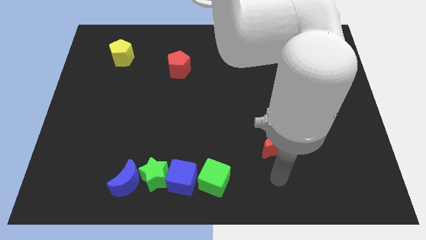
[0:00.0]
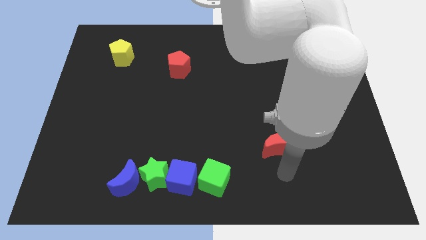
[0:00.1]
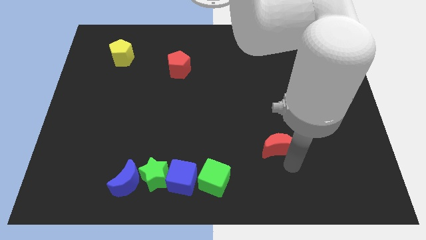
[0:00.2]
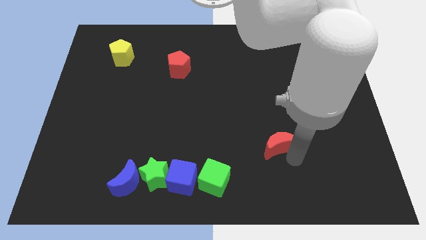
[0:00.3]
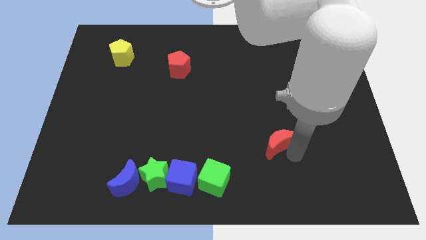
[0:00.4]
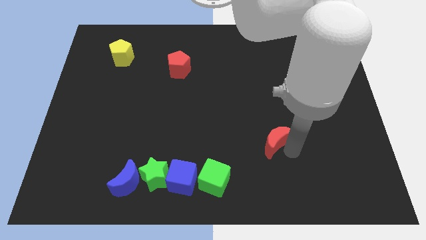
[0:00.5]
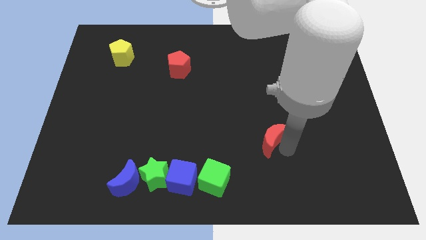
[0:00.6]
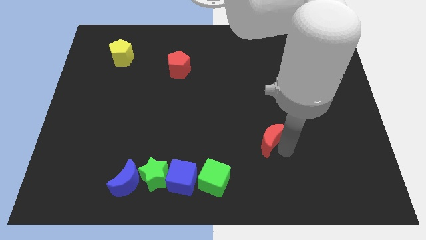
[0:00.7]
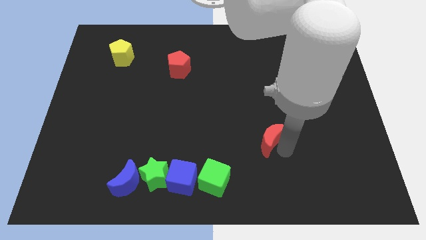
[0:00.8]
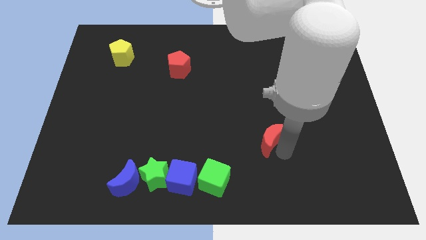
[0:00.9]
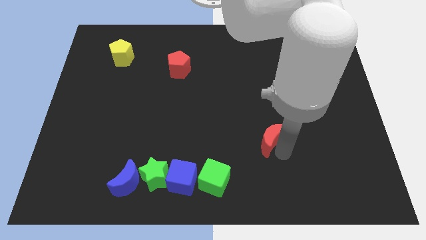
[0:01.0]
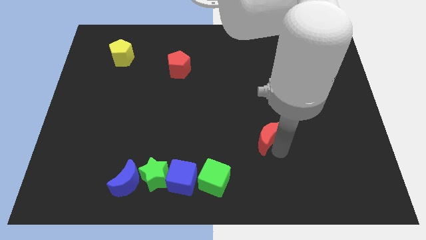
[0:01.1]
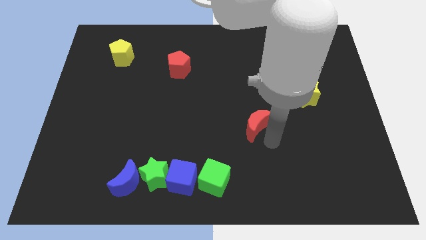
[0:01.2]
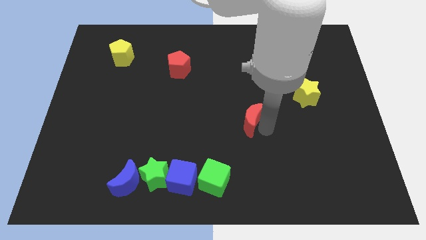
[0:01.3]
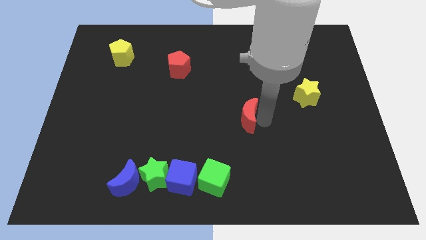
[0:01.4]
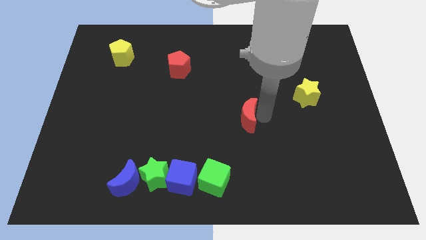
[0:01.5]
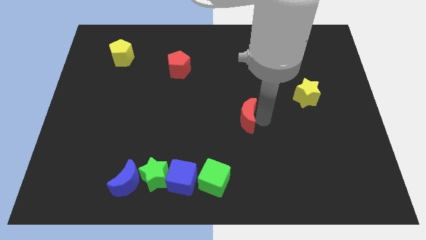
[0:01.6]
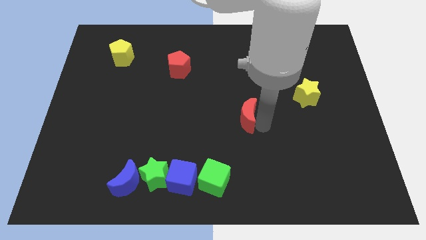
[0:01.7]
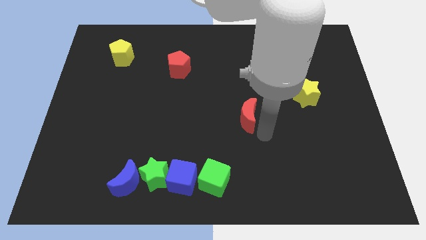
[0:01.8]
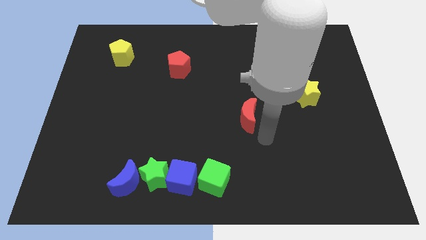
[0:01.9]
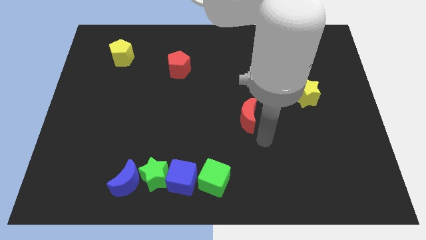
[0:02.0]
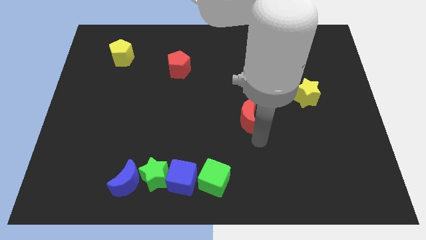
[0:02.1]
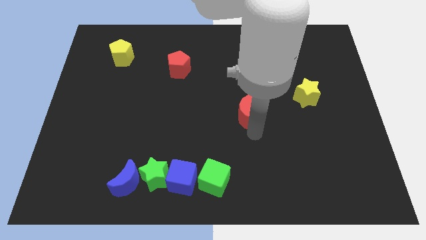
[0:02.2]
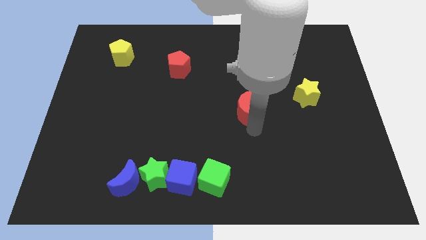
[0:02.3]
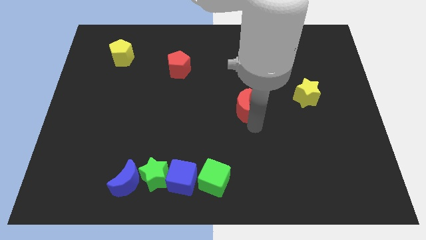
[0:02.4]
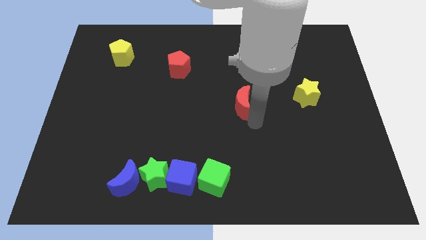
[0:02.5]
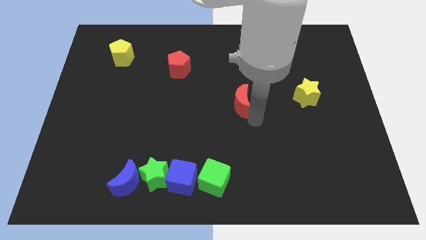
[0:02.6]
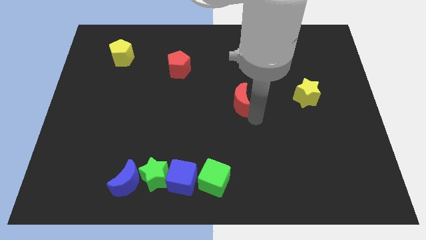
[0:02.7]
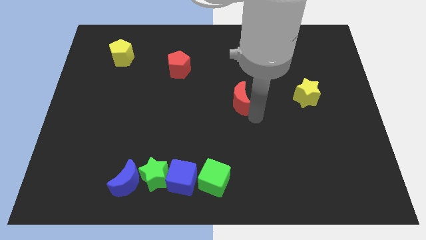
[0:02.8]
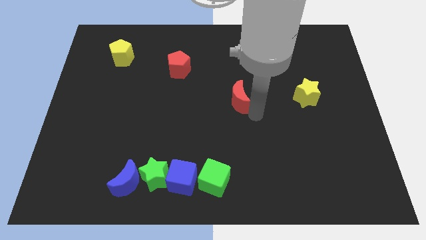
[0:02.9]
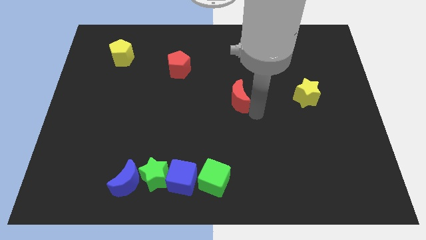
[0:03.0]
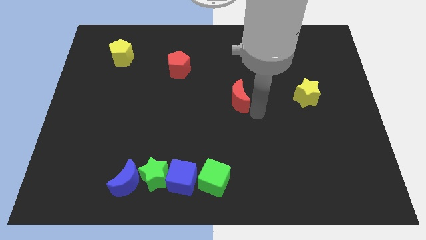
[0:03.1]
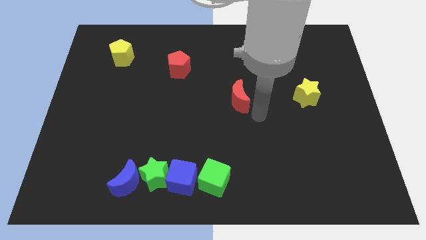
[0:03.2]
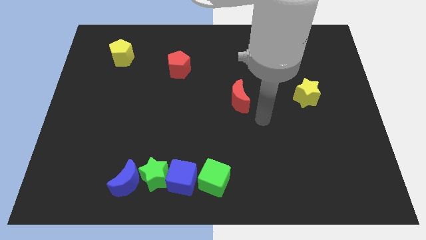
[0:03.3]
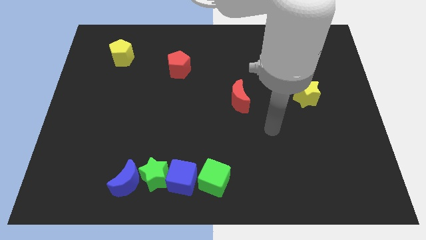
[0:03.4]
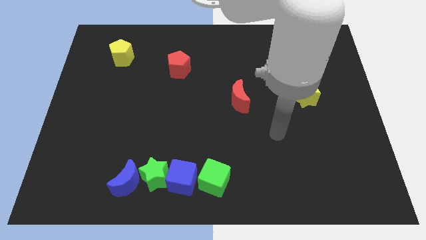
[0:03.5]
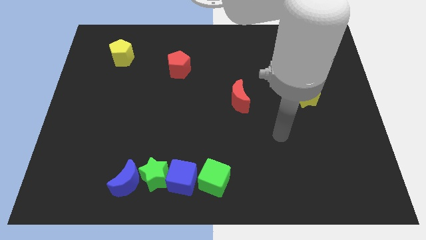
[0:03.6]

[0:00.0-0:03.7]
place the red moon to the center of the board

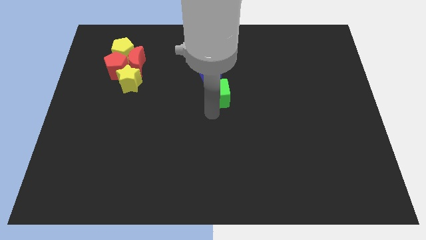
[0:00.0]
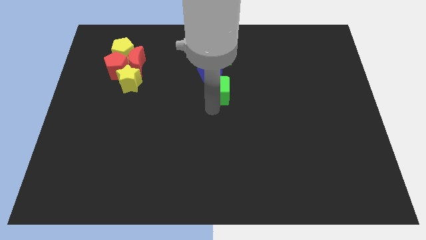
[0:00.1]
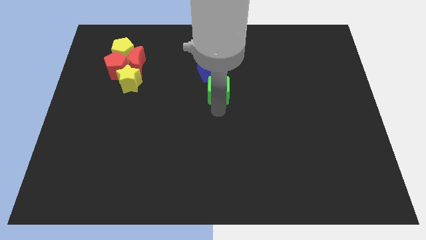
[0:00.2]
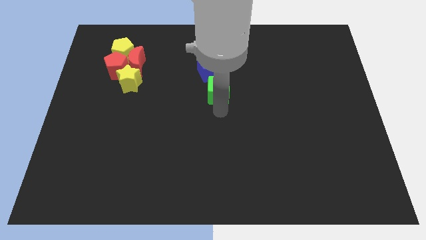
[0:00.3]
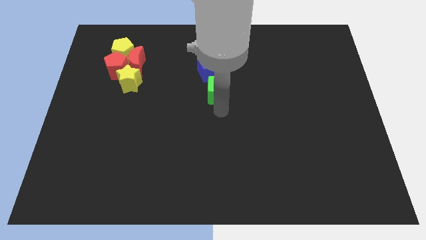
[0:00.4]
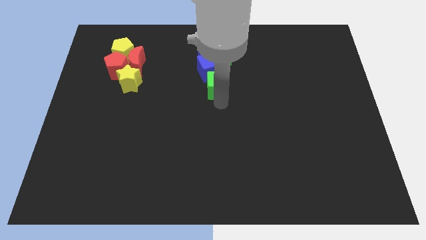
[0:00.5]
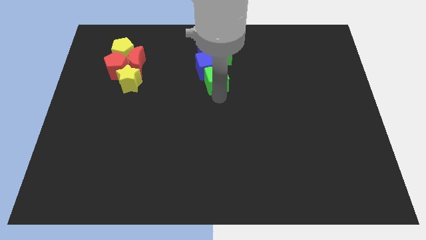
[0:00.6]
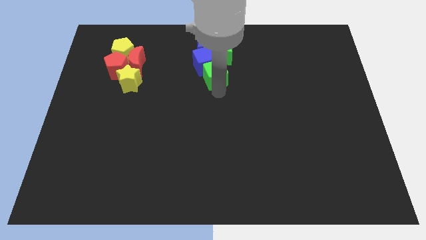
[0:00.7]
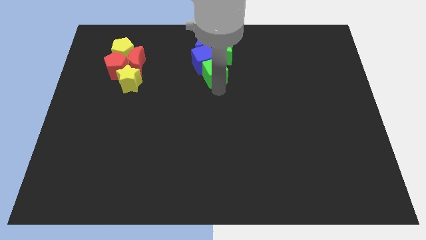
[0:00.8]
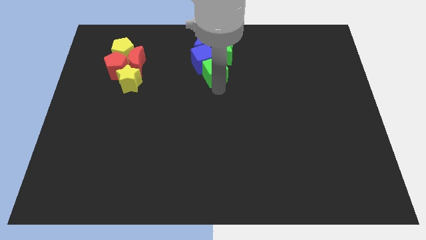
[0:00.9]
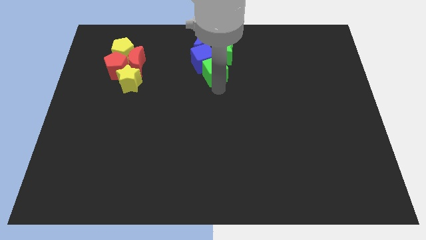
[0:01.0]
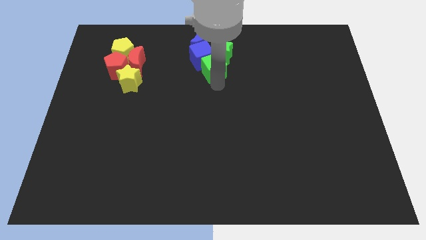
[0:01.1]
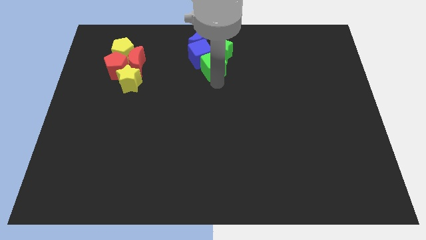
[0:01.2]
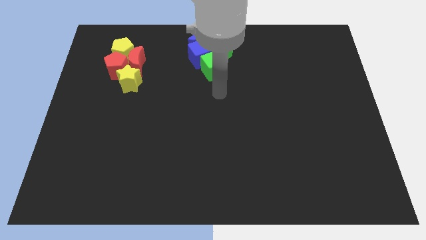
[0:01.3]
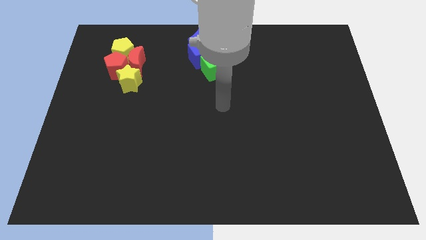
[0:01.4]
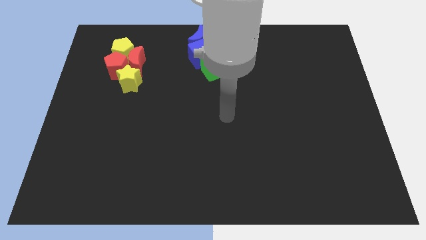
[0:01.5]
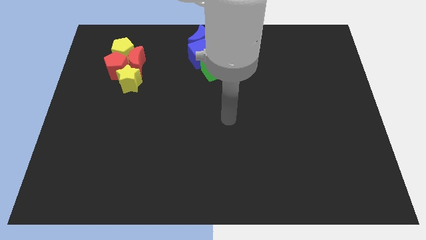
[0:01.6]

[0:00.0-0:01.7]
move the green cube into the blue cube

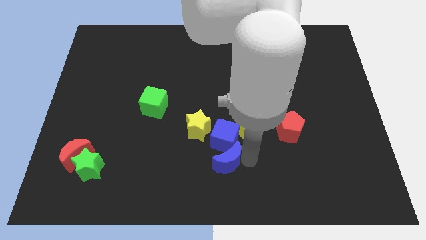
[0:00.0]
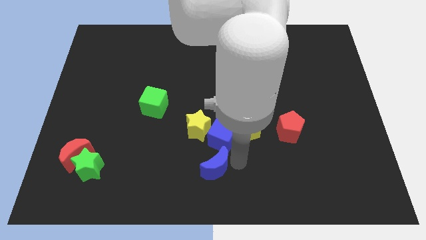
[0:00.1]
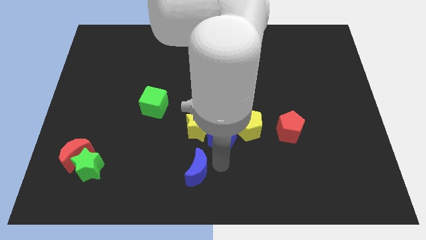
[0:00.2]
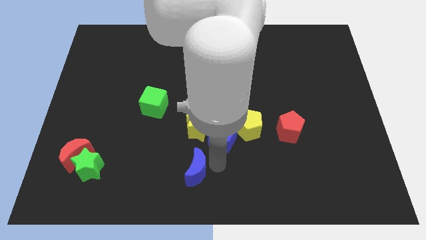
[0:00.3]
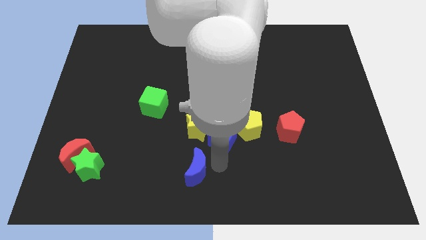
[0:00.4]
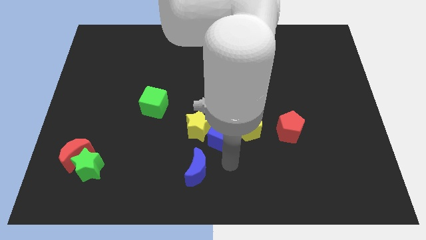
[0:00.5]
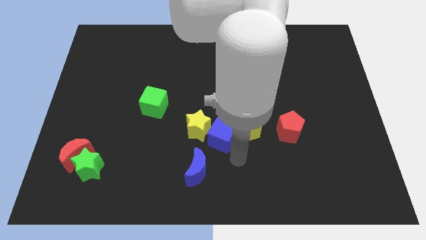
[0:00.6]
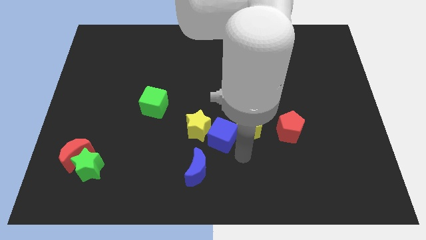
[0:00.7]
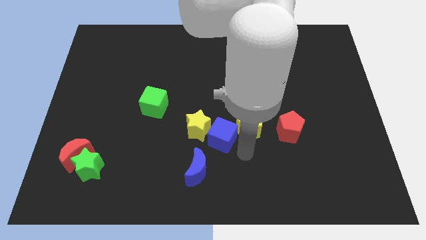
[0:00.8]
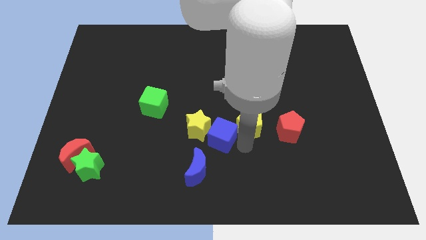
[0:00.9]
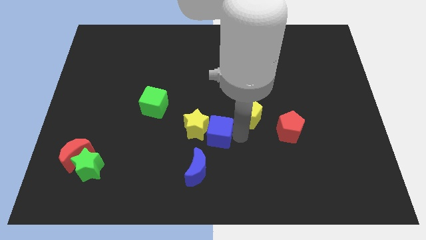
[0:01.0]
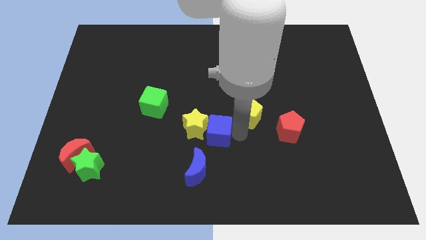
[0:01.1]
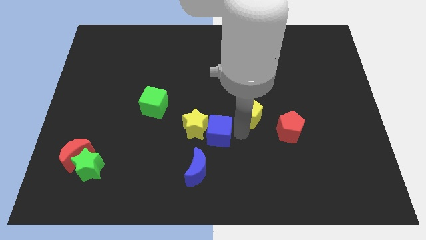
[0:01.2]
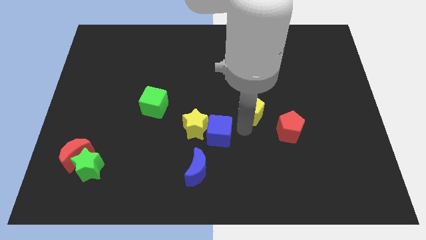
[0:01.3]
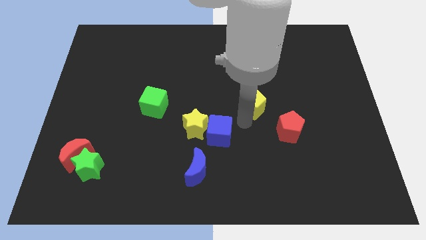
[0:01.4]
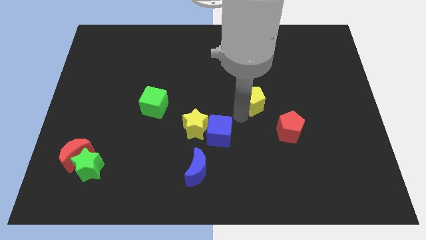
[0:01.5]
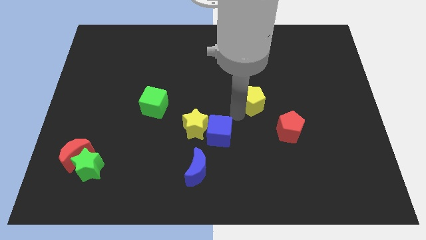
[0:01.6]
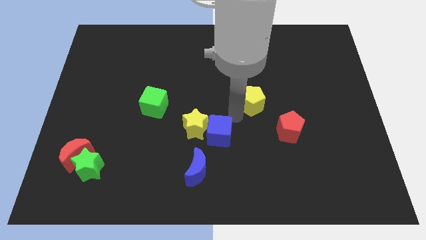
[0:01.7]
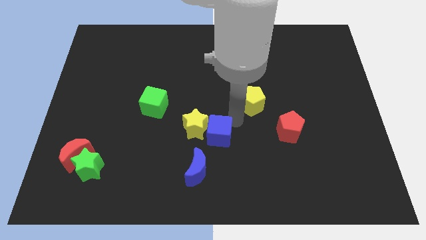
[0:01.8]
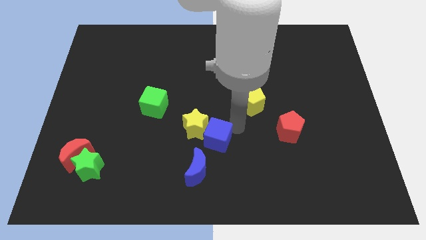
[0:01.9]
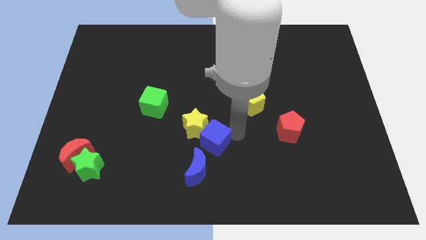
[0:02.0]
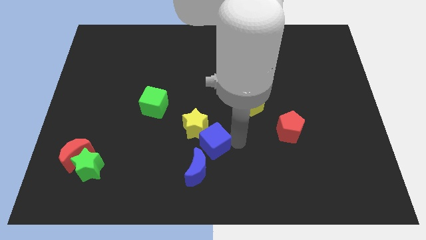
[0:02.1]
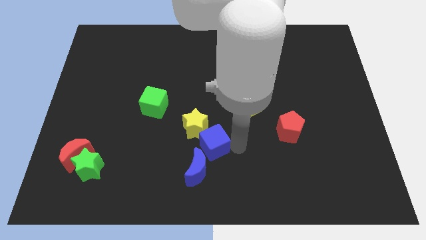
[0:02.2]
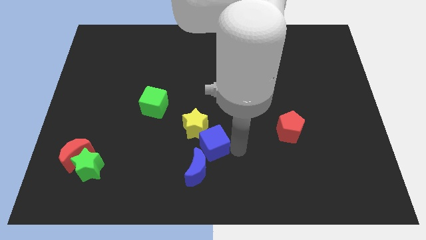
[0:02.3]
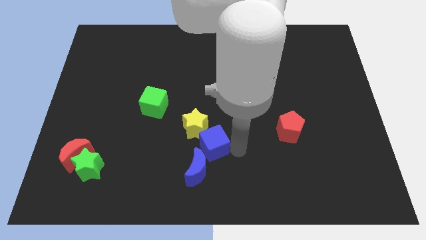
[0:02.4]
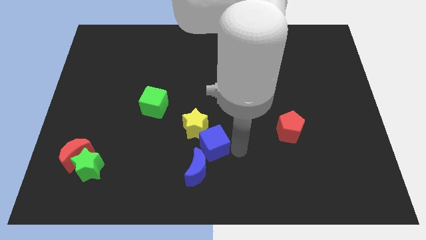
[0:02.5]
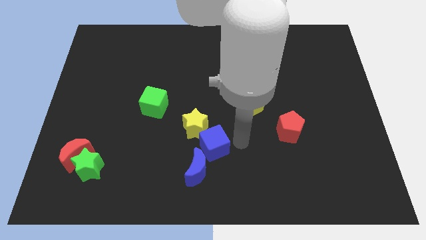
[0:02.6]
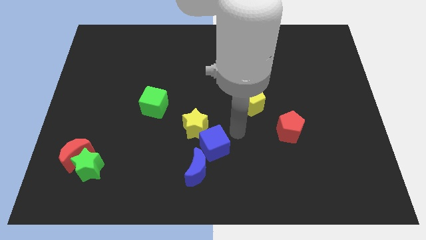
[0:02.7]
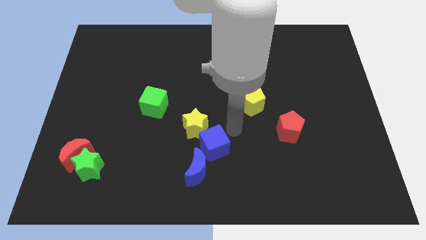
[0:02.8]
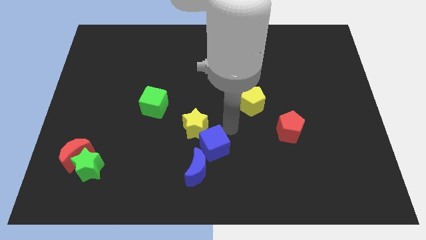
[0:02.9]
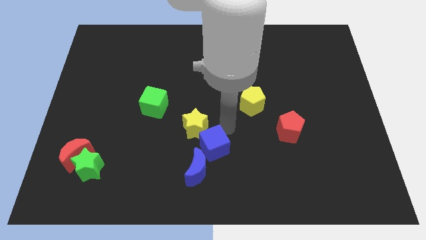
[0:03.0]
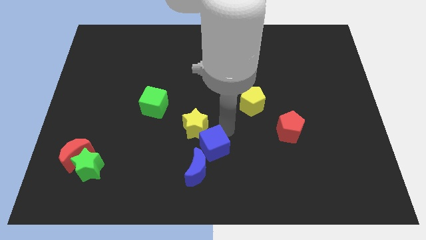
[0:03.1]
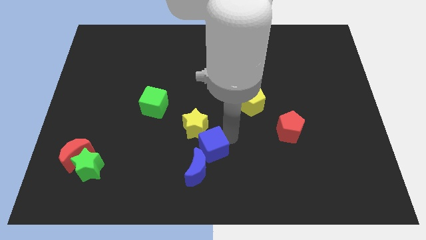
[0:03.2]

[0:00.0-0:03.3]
move the yellow pentagon diagonally top left of the red pentagon
